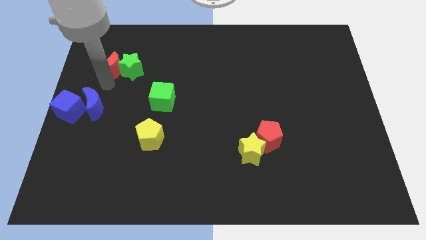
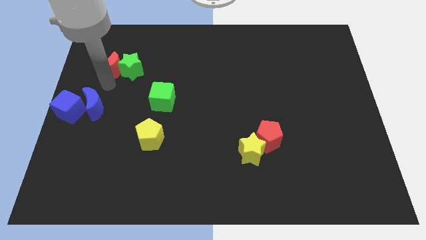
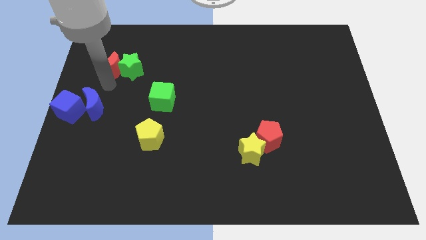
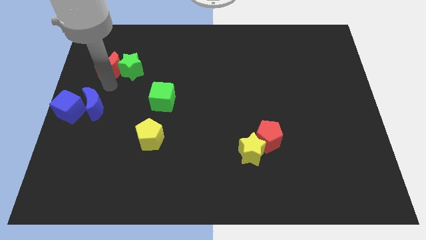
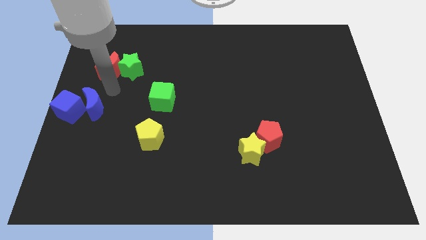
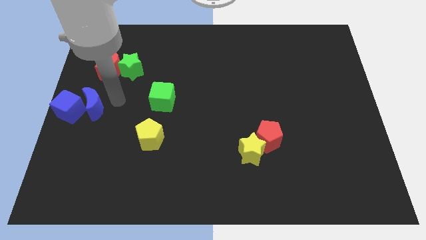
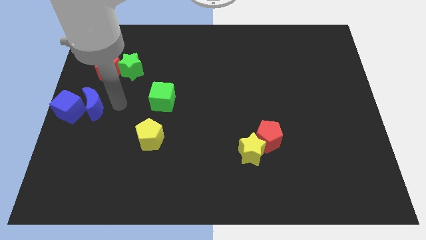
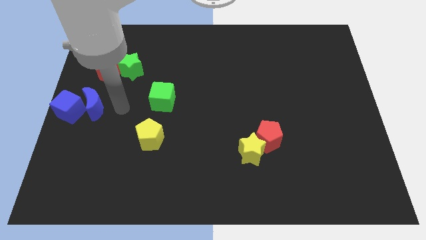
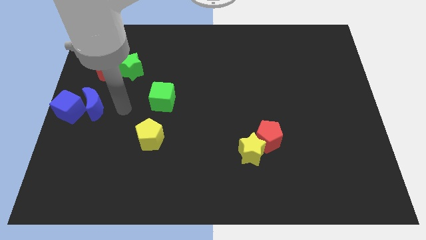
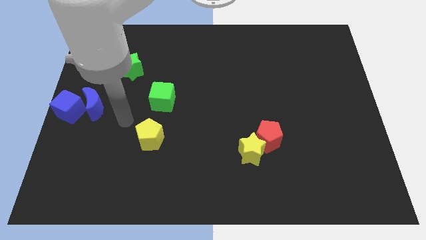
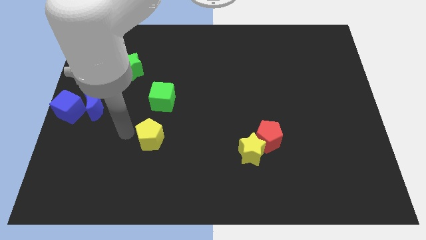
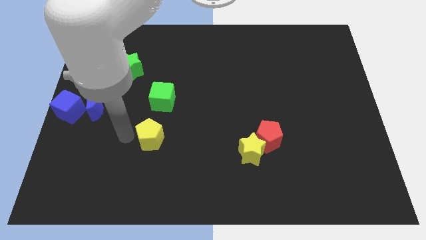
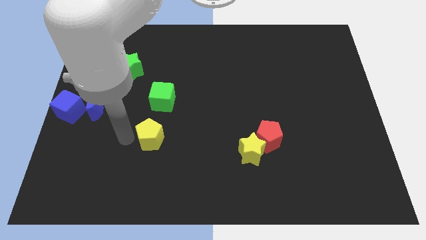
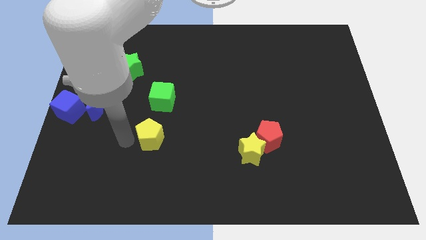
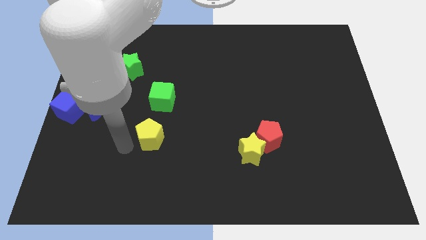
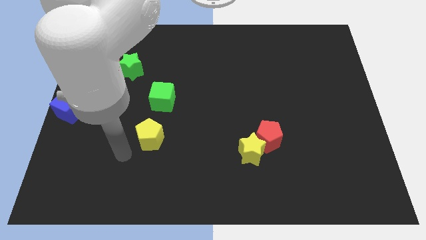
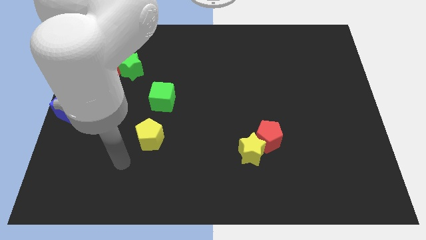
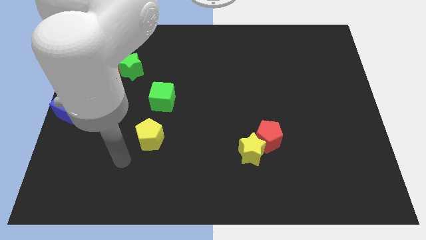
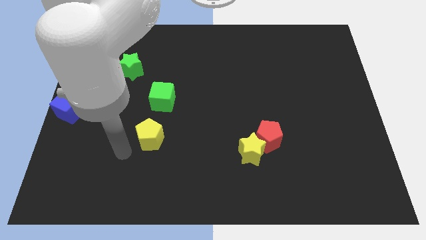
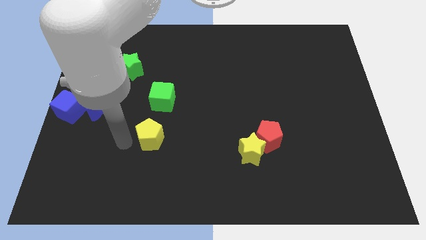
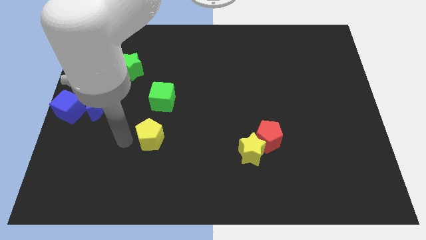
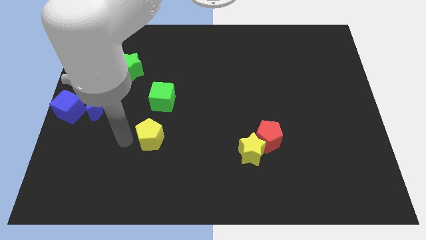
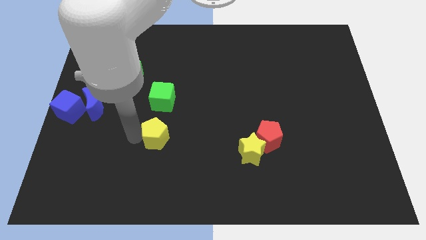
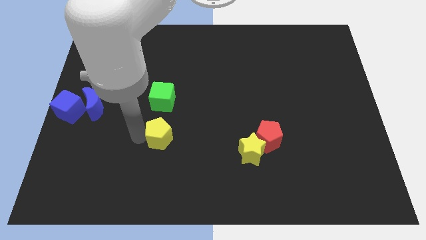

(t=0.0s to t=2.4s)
slightly push the yellow pentagon to the right of the board

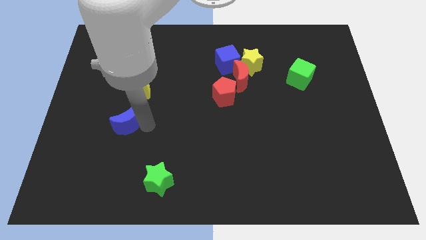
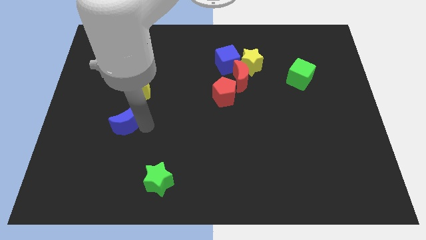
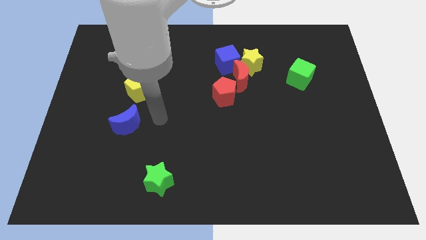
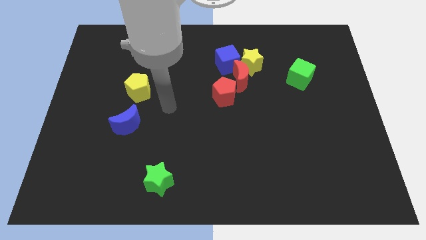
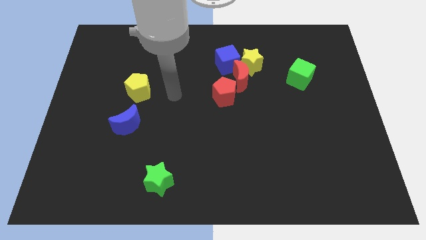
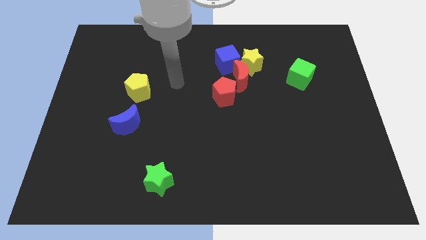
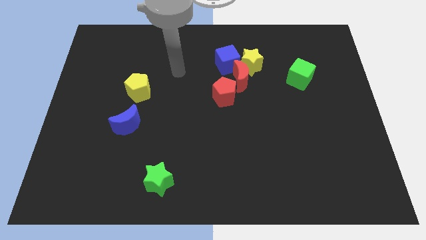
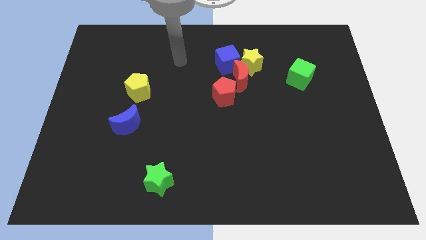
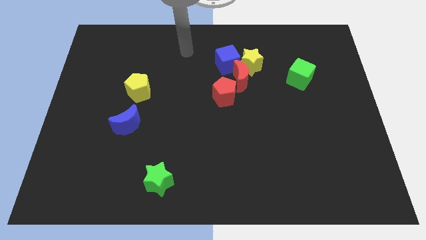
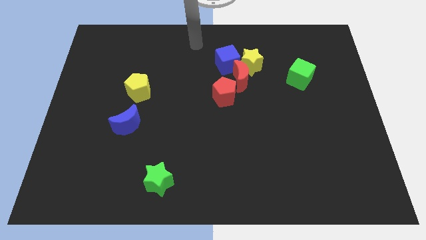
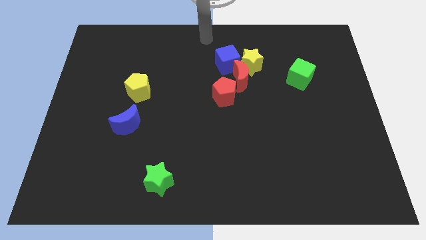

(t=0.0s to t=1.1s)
slide your arm away from blue moon

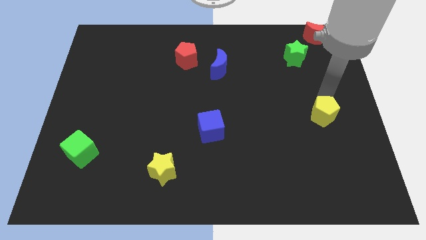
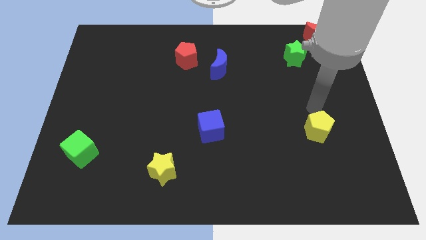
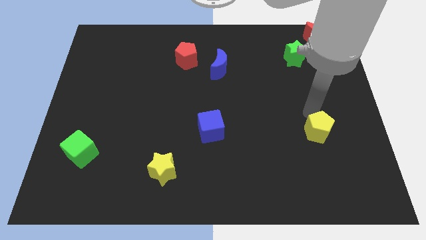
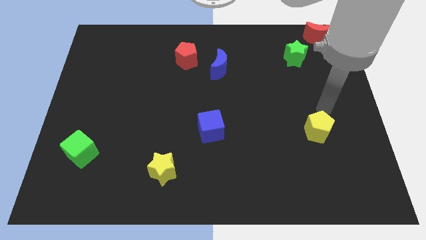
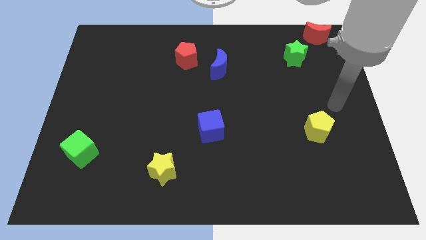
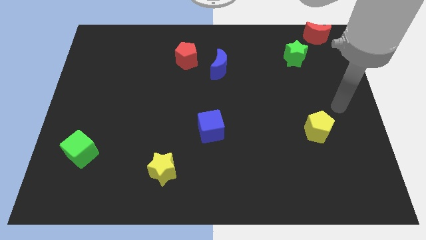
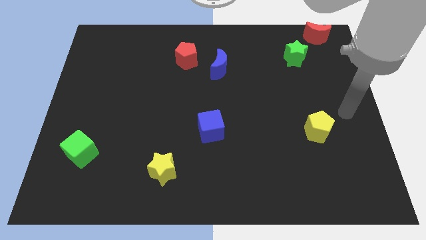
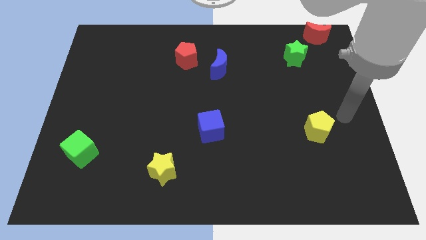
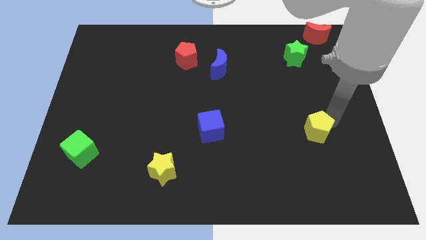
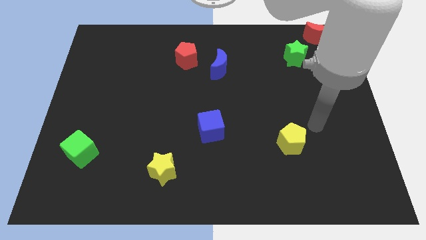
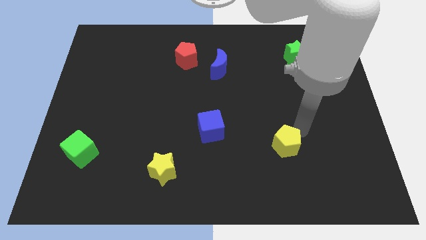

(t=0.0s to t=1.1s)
slide yellow pentagon to right of blue cube

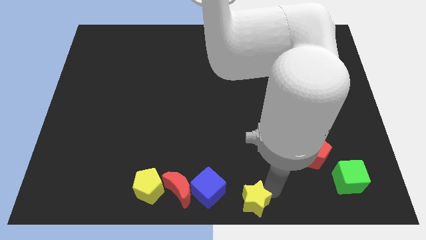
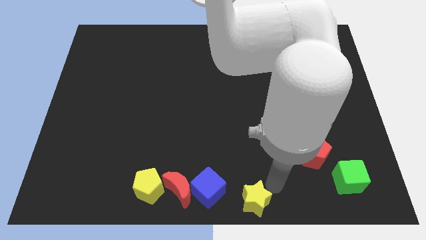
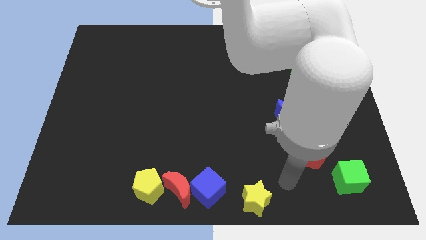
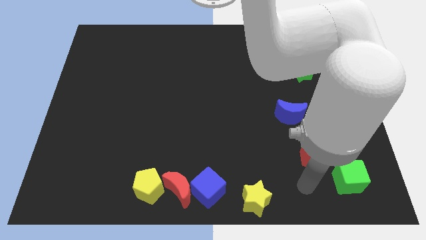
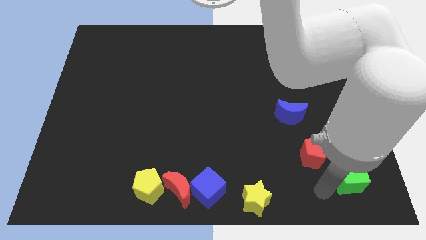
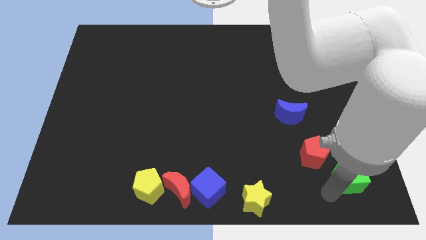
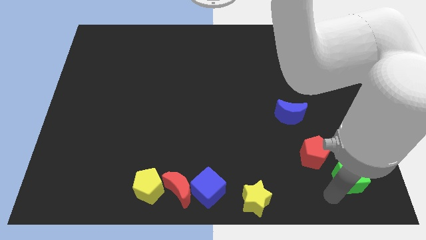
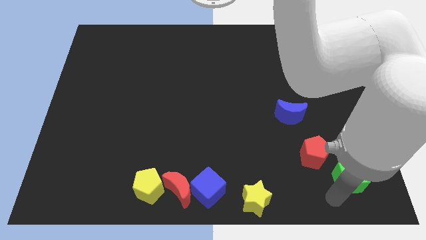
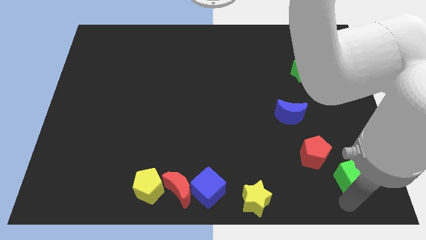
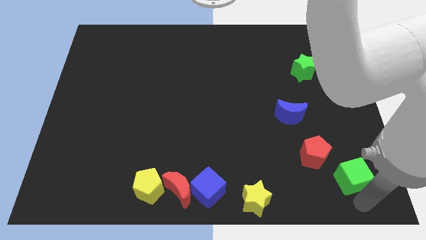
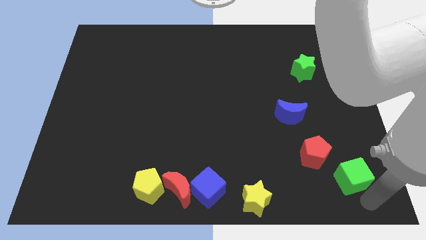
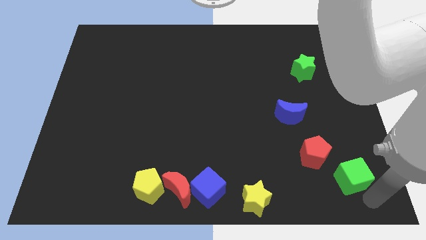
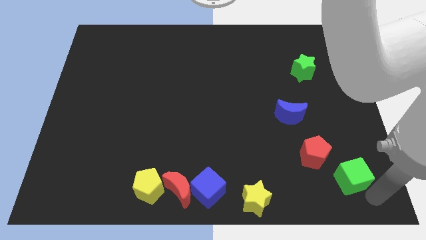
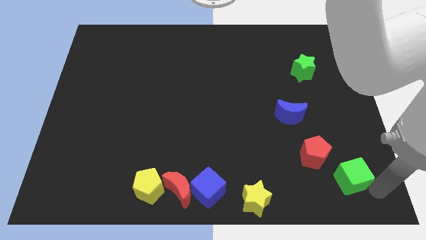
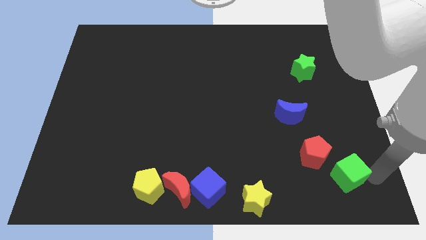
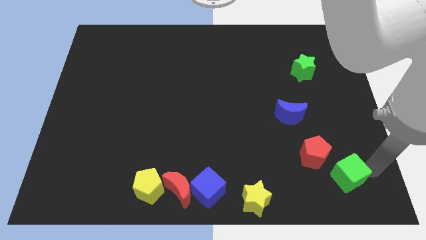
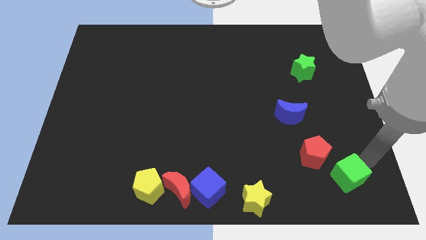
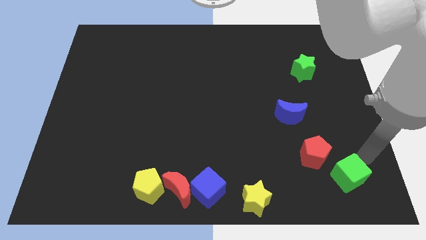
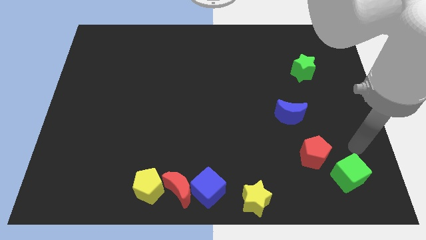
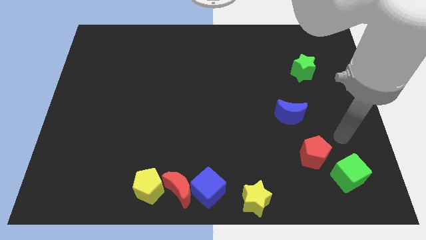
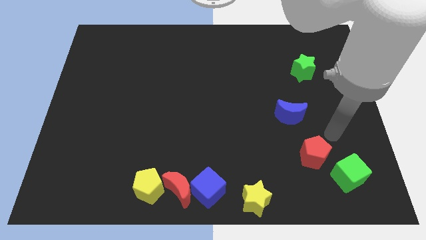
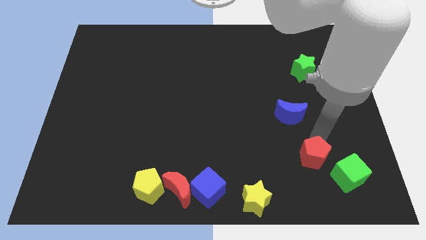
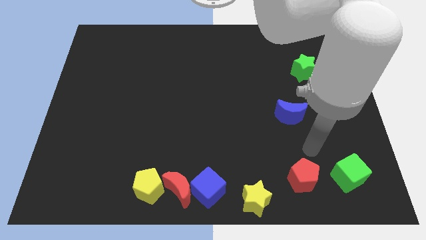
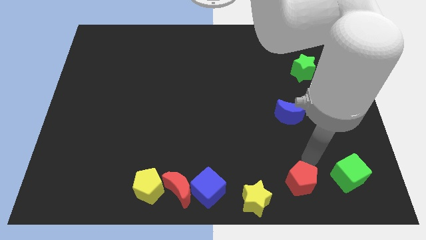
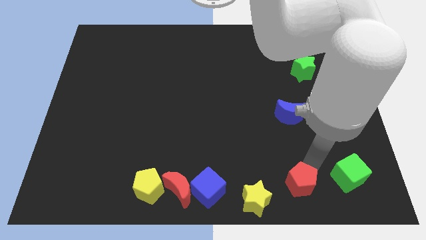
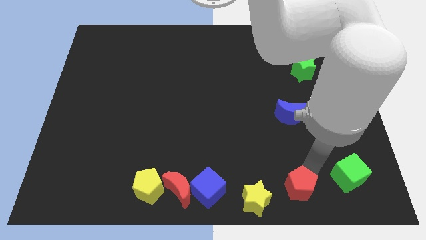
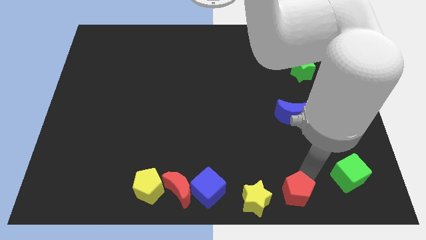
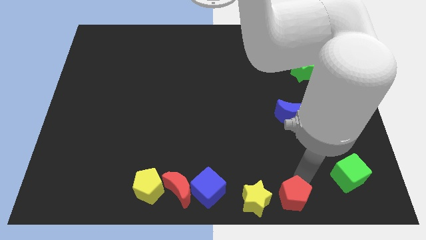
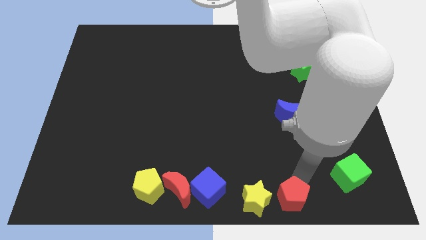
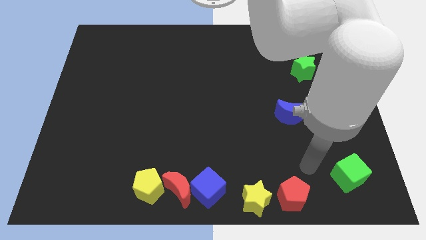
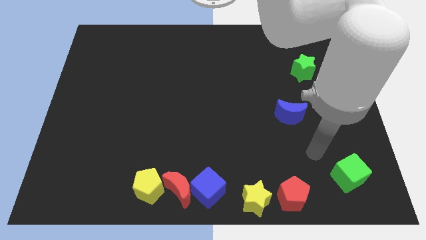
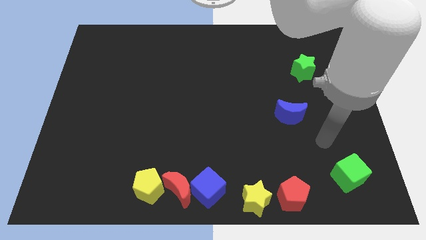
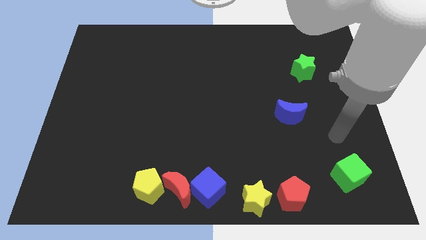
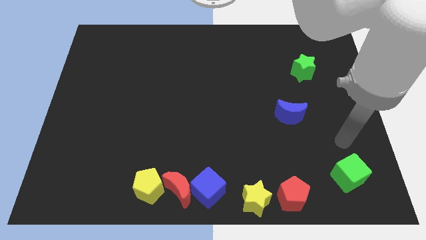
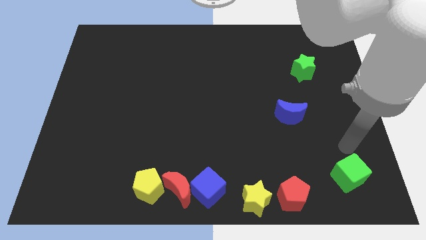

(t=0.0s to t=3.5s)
move the red pentagon right to the yellow star

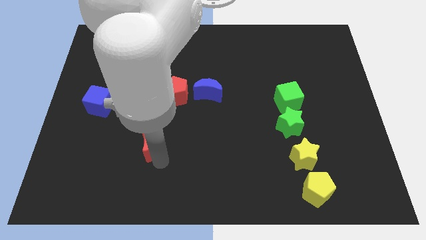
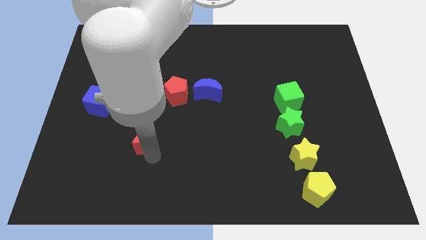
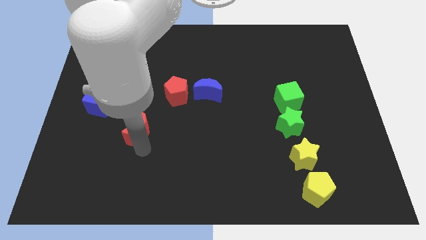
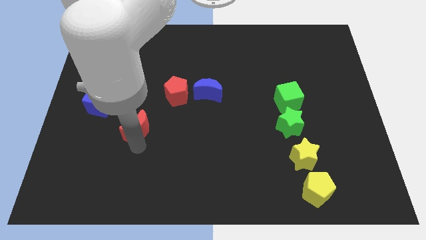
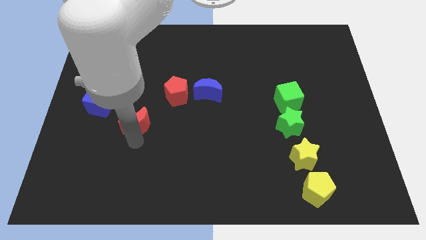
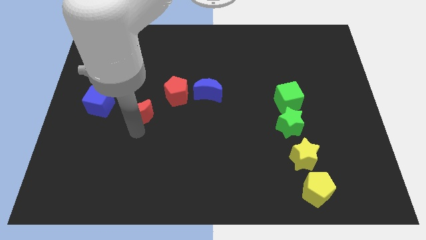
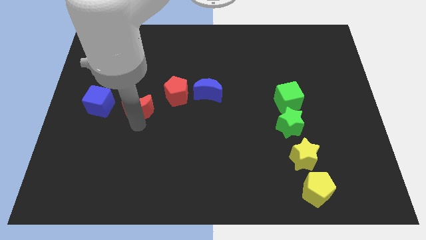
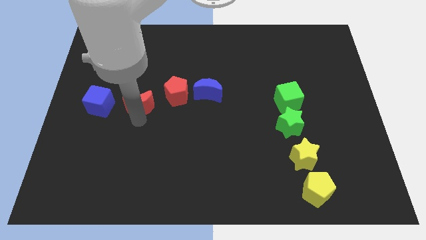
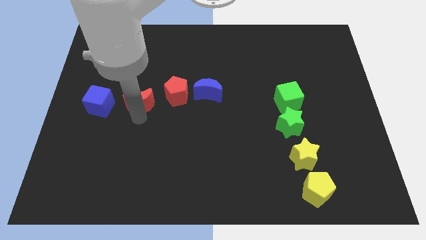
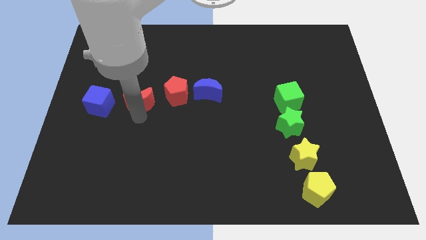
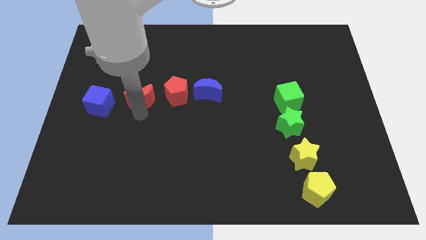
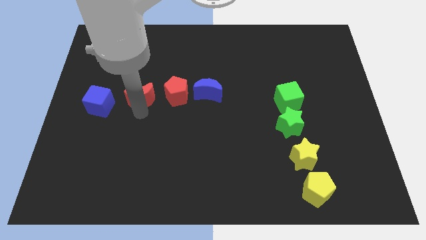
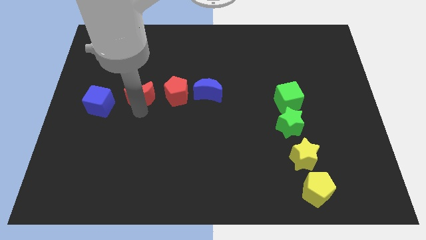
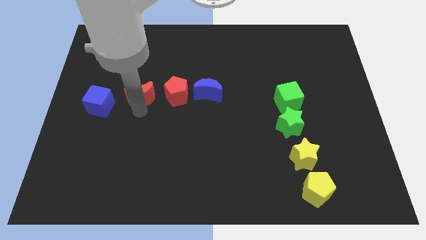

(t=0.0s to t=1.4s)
place red moon in between red pentagon and blue cube
